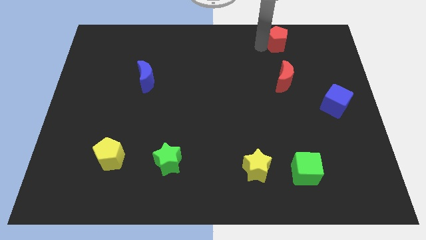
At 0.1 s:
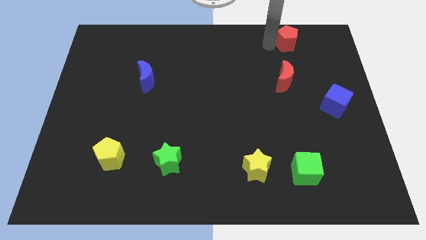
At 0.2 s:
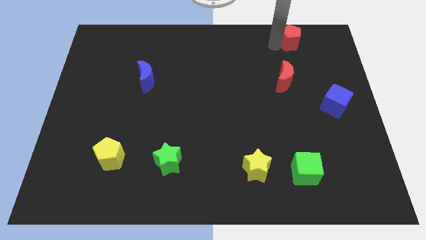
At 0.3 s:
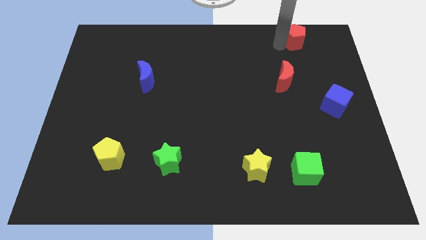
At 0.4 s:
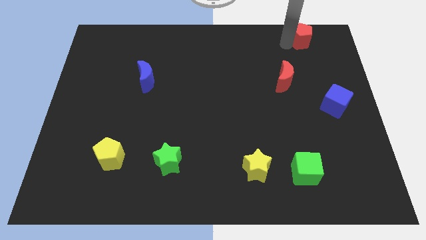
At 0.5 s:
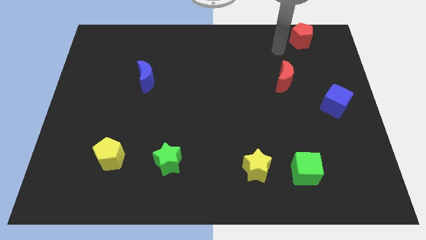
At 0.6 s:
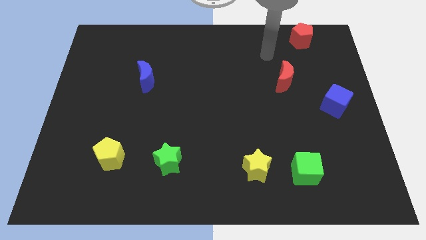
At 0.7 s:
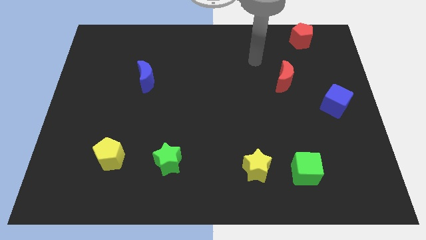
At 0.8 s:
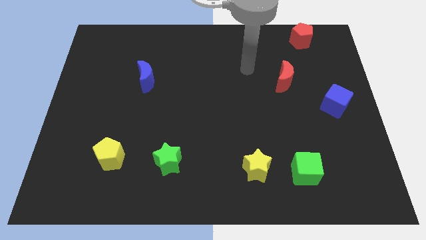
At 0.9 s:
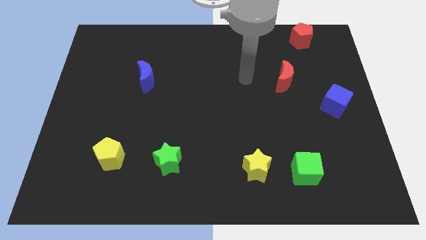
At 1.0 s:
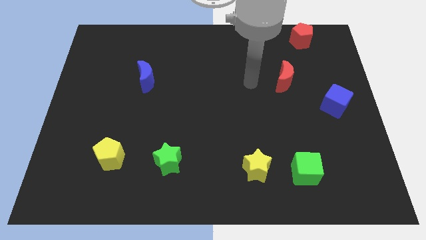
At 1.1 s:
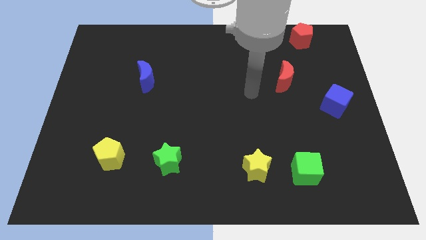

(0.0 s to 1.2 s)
push the red pentagon to the top right corner of the board

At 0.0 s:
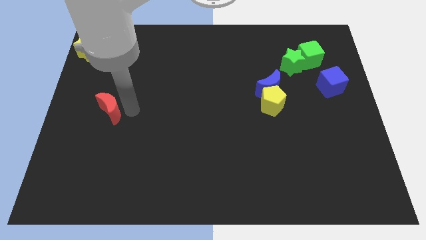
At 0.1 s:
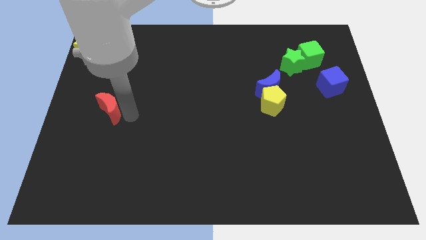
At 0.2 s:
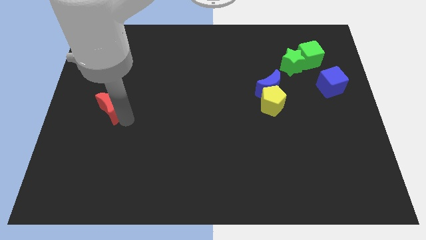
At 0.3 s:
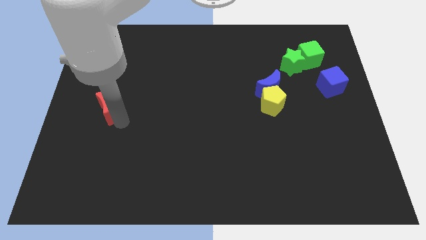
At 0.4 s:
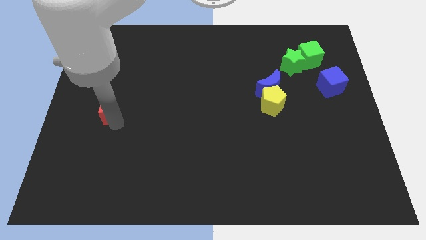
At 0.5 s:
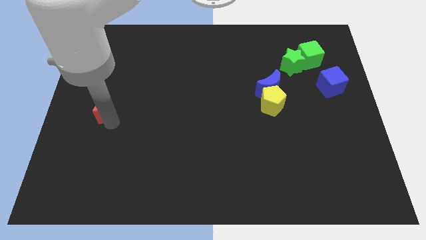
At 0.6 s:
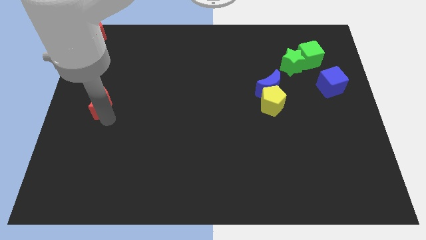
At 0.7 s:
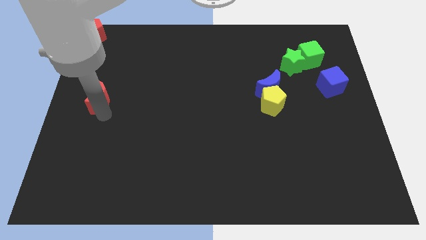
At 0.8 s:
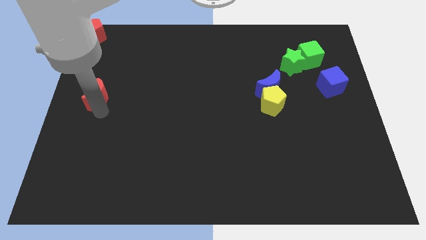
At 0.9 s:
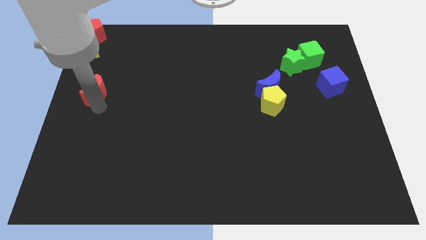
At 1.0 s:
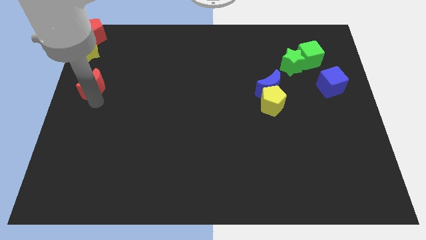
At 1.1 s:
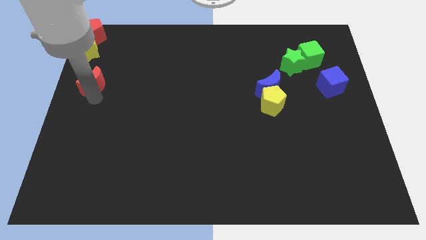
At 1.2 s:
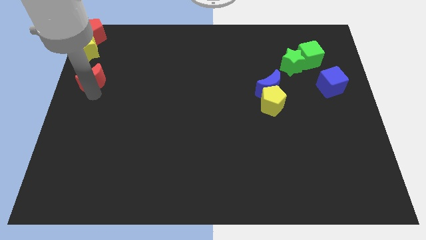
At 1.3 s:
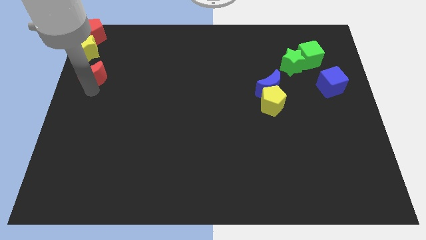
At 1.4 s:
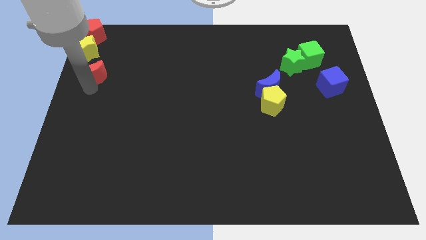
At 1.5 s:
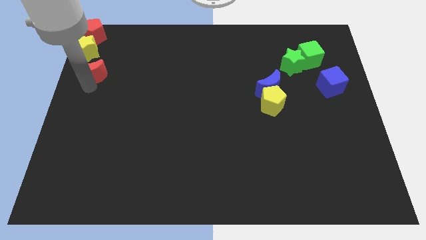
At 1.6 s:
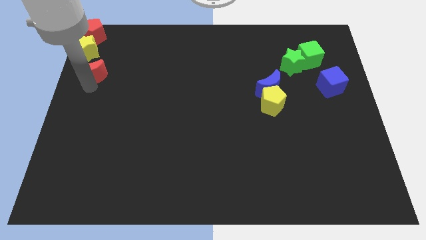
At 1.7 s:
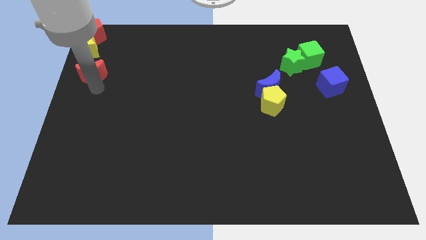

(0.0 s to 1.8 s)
place the red moon below the yellow star

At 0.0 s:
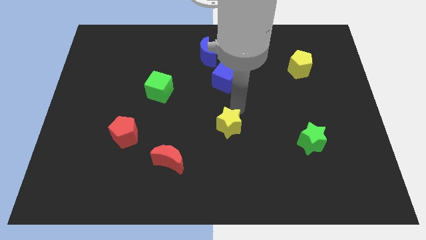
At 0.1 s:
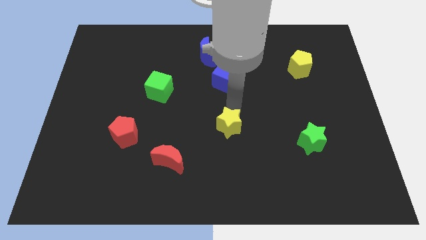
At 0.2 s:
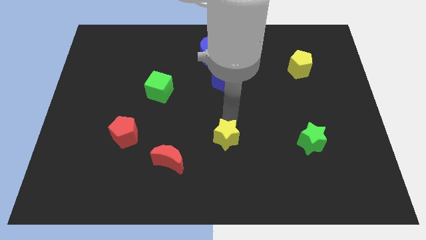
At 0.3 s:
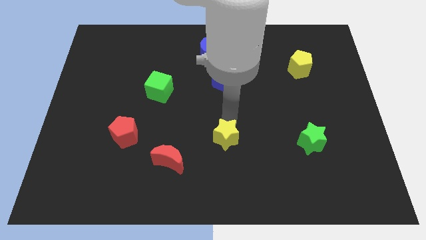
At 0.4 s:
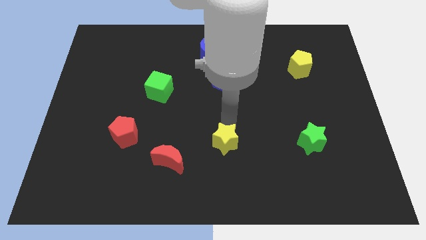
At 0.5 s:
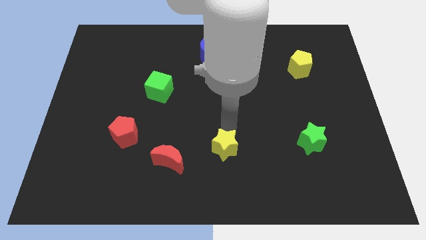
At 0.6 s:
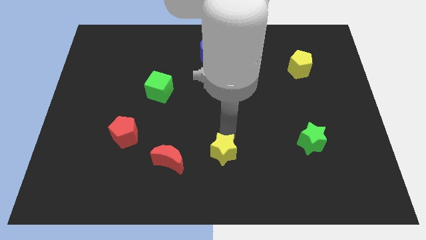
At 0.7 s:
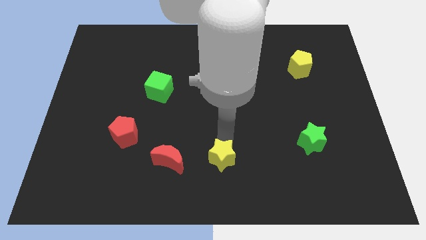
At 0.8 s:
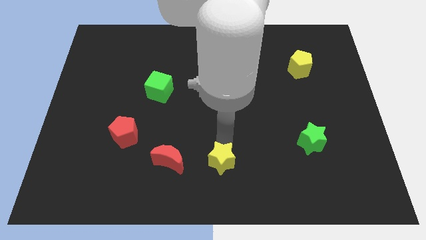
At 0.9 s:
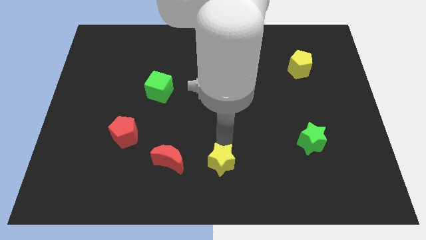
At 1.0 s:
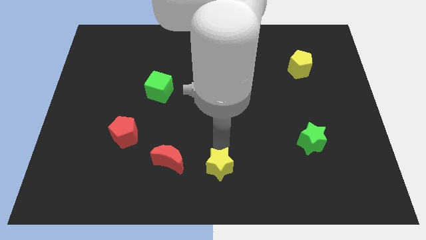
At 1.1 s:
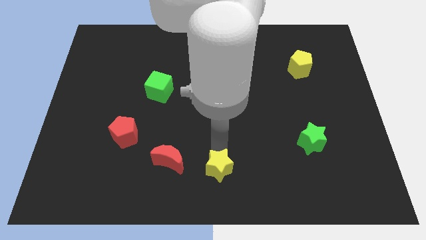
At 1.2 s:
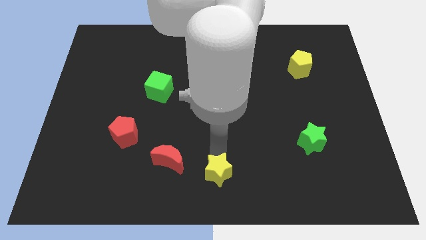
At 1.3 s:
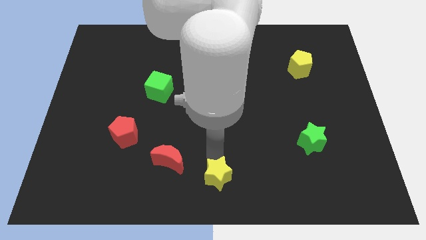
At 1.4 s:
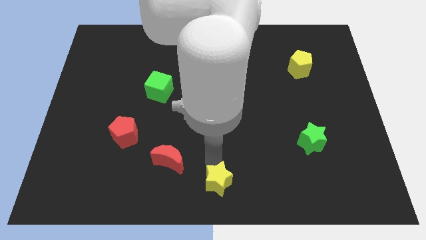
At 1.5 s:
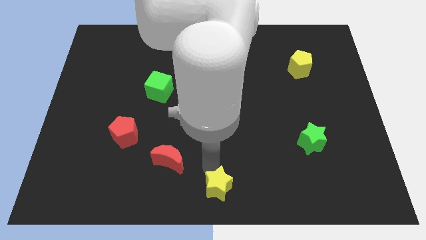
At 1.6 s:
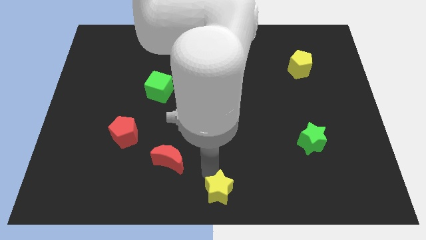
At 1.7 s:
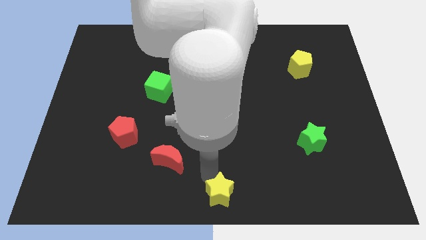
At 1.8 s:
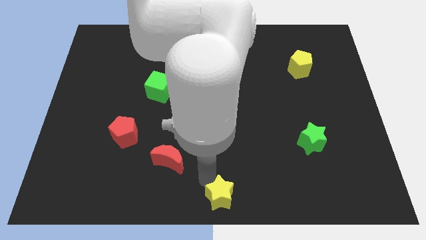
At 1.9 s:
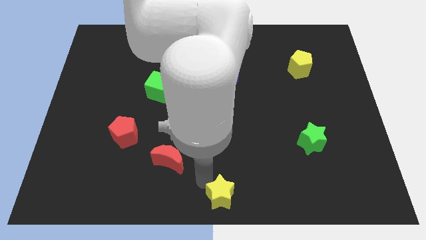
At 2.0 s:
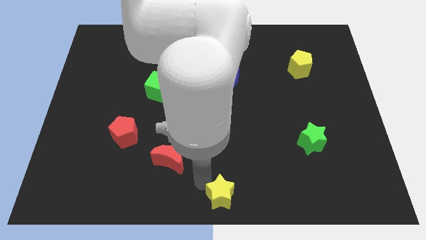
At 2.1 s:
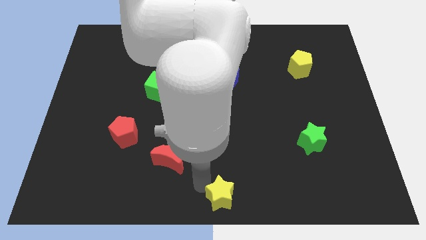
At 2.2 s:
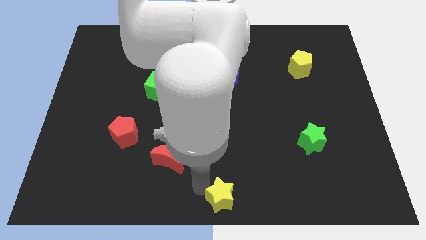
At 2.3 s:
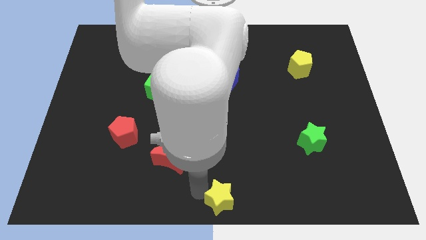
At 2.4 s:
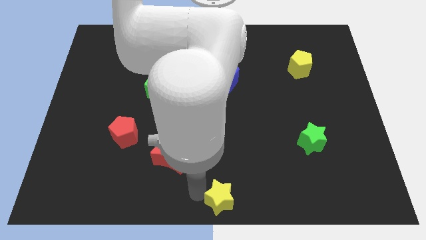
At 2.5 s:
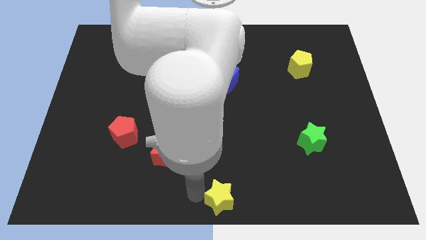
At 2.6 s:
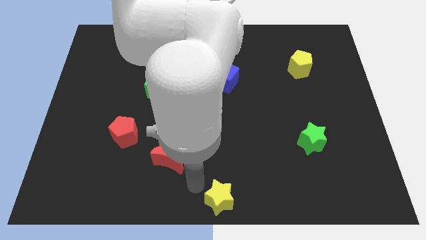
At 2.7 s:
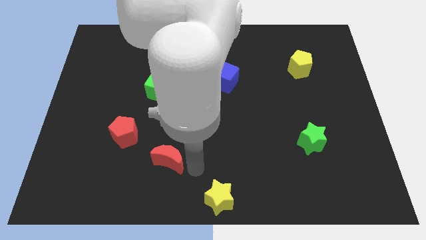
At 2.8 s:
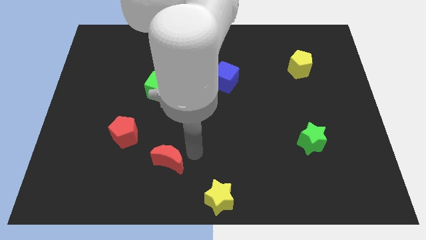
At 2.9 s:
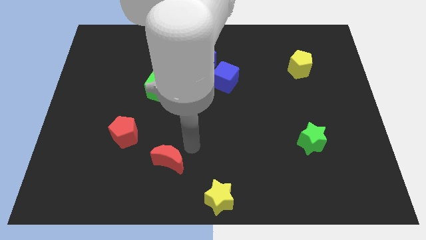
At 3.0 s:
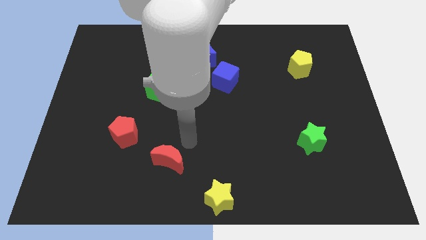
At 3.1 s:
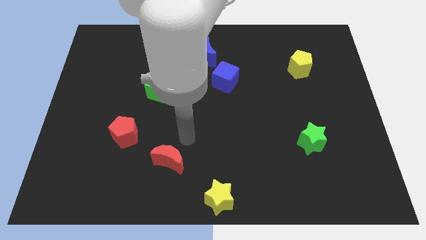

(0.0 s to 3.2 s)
move the yellow star at the bottom center of the board

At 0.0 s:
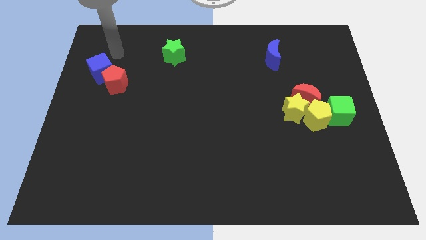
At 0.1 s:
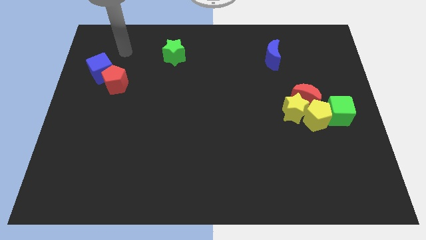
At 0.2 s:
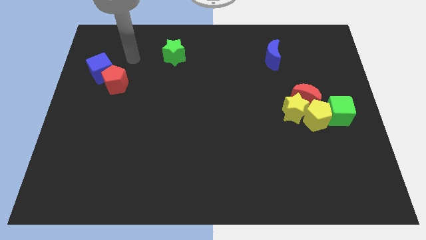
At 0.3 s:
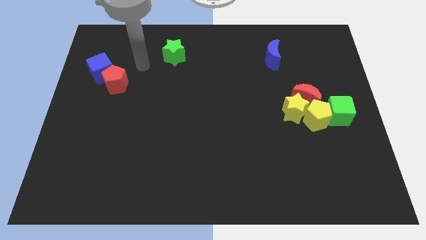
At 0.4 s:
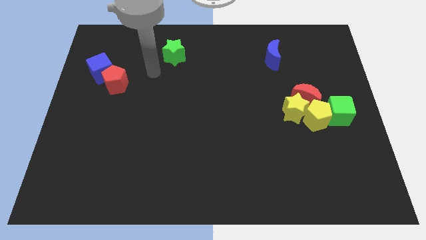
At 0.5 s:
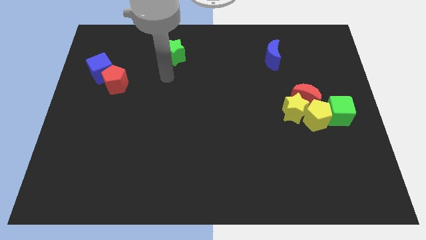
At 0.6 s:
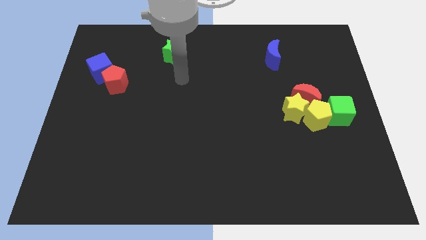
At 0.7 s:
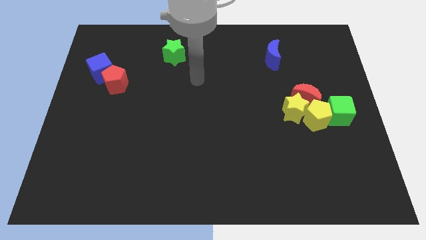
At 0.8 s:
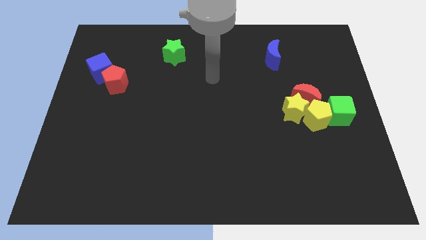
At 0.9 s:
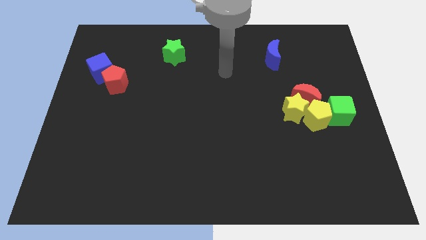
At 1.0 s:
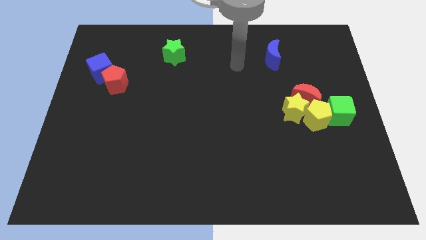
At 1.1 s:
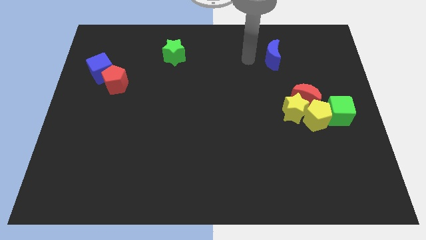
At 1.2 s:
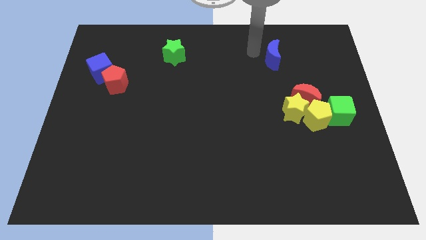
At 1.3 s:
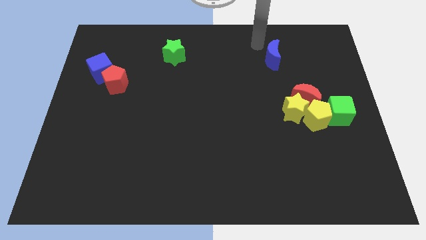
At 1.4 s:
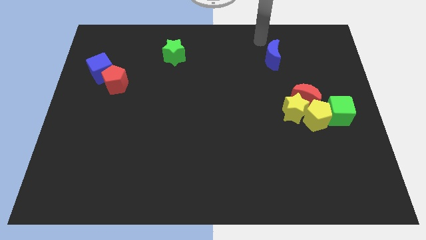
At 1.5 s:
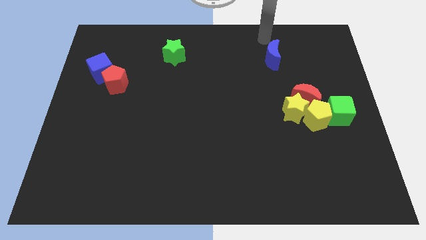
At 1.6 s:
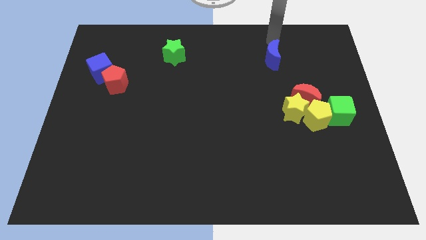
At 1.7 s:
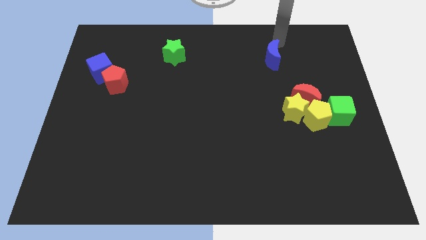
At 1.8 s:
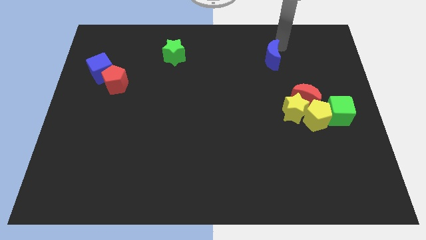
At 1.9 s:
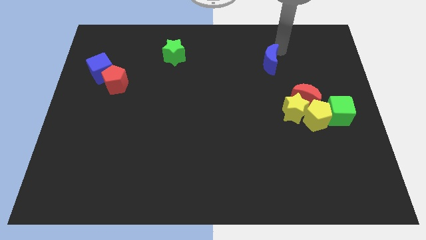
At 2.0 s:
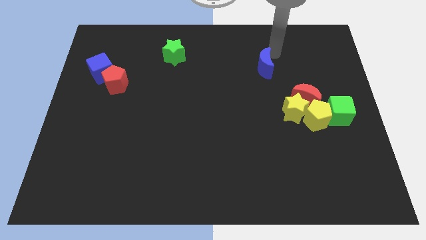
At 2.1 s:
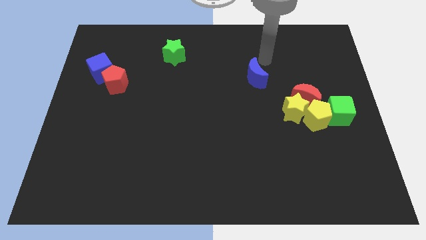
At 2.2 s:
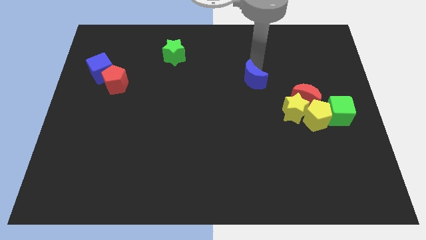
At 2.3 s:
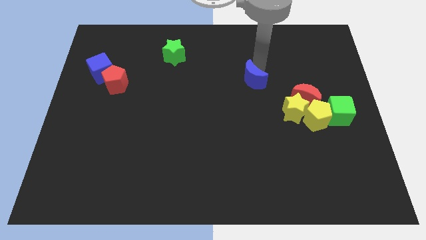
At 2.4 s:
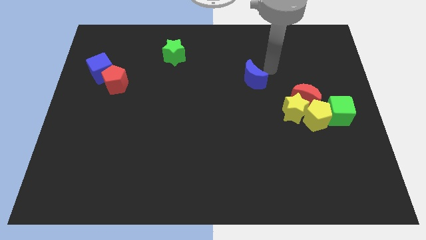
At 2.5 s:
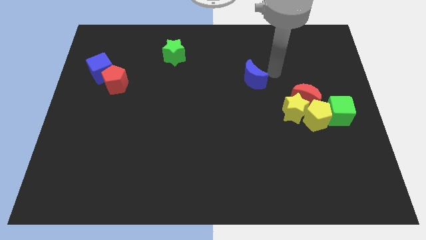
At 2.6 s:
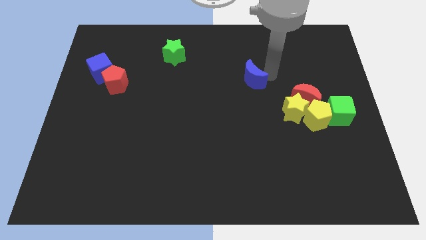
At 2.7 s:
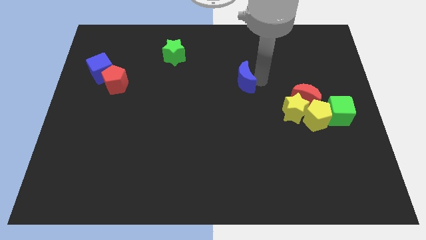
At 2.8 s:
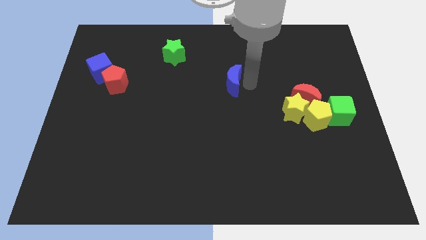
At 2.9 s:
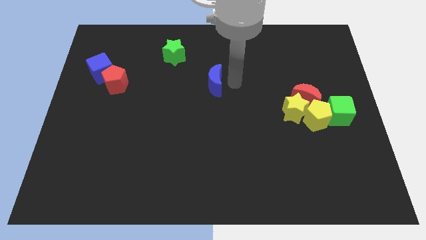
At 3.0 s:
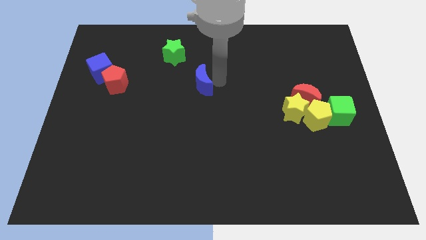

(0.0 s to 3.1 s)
move the blue crescent to bottom right of the green star
